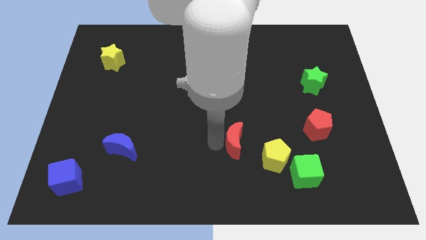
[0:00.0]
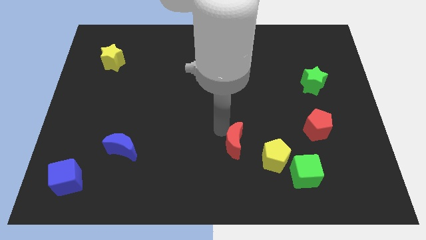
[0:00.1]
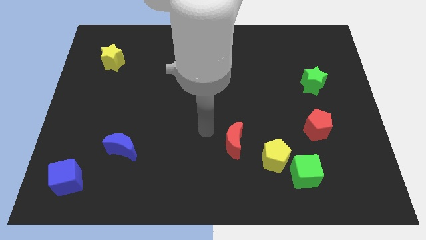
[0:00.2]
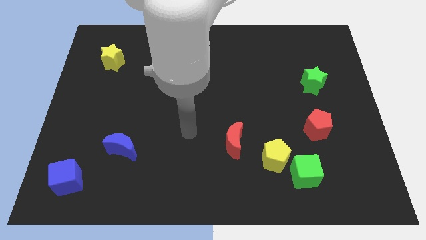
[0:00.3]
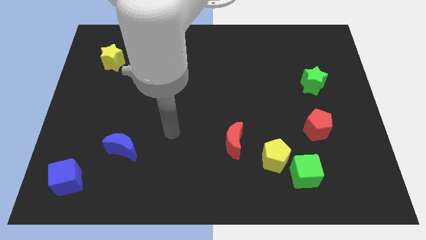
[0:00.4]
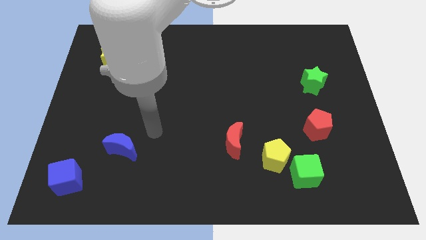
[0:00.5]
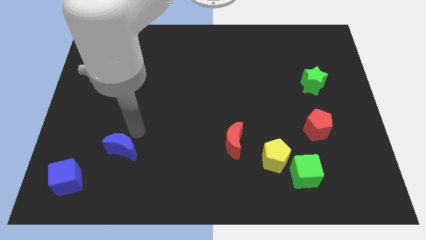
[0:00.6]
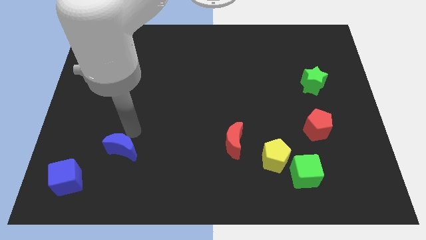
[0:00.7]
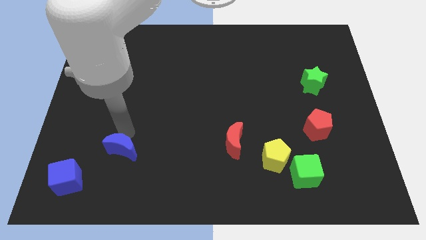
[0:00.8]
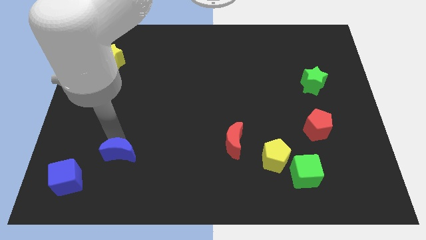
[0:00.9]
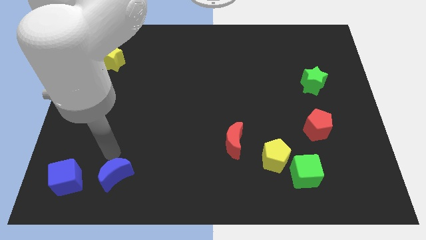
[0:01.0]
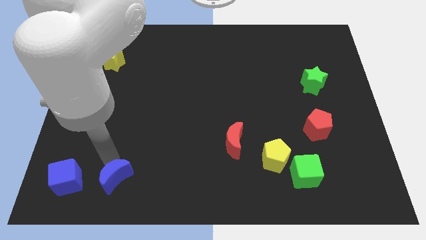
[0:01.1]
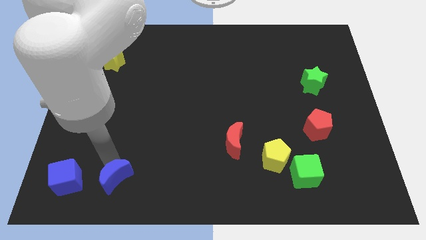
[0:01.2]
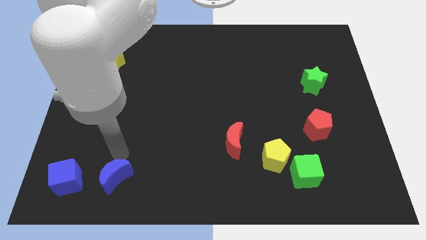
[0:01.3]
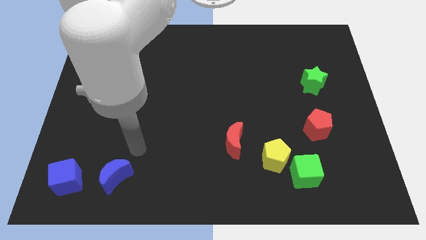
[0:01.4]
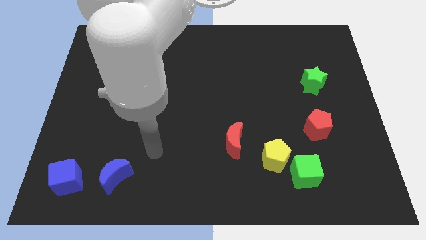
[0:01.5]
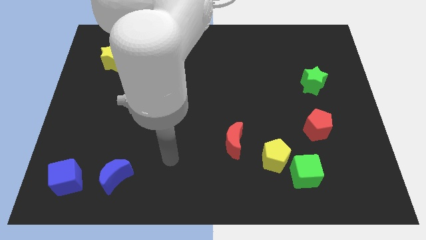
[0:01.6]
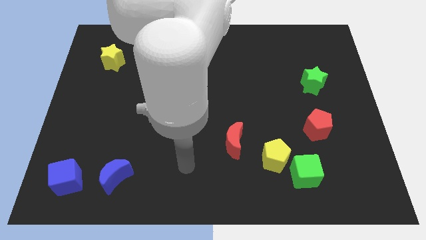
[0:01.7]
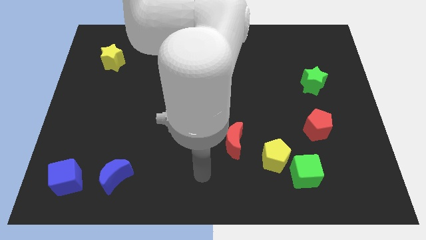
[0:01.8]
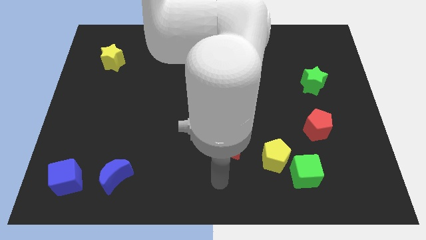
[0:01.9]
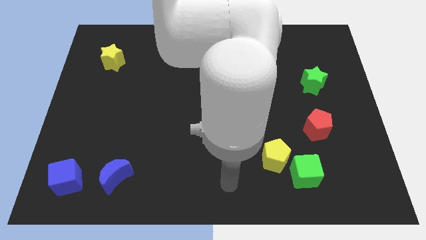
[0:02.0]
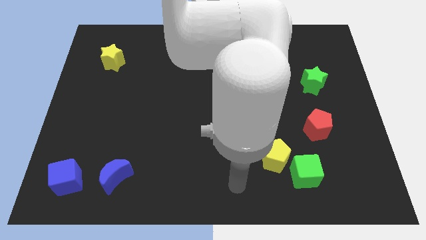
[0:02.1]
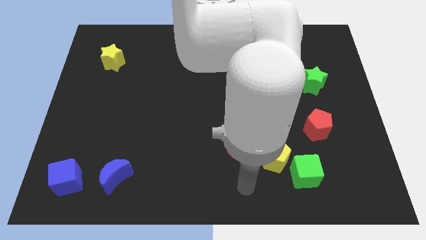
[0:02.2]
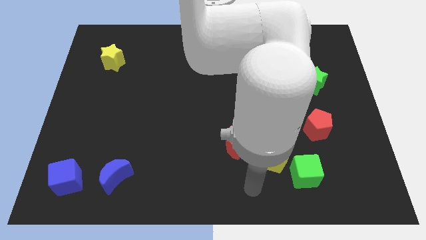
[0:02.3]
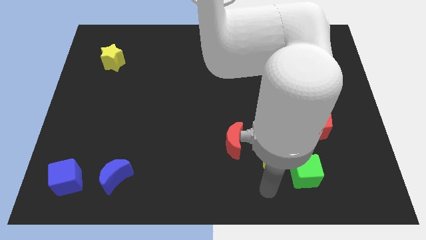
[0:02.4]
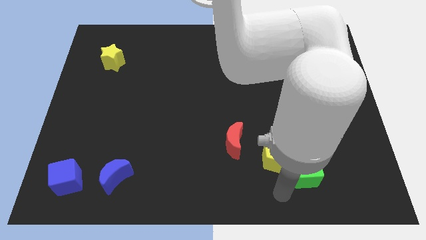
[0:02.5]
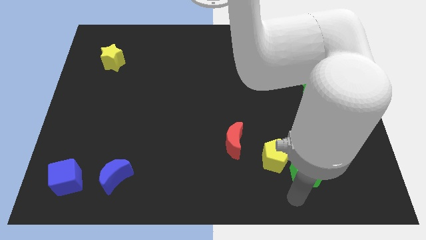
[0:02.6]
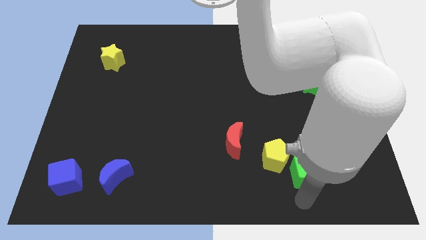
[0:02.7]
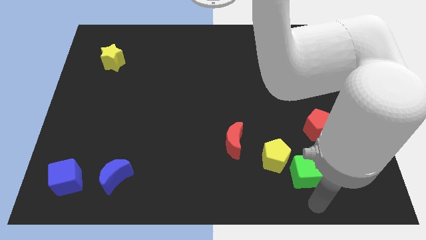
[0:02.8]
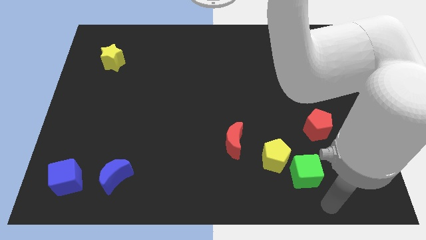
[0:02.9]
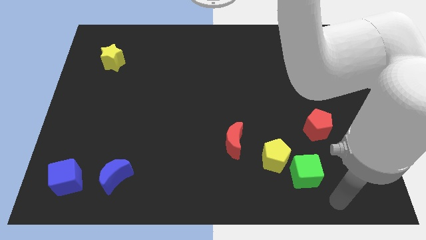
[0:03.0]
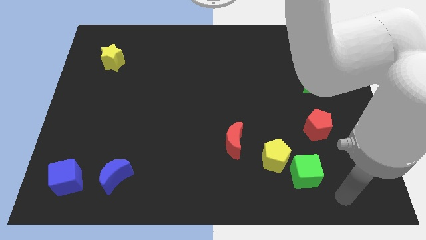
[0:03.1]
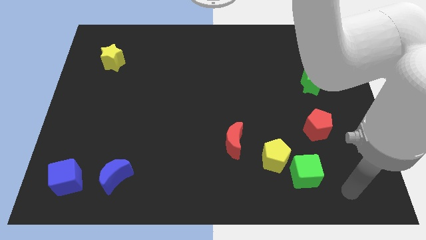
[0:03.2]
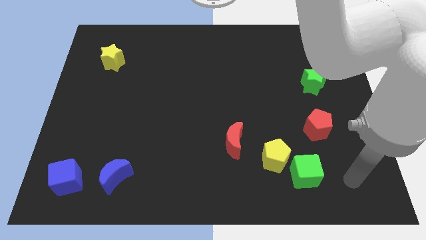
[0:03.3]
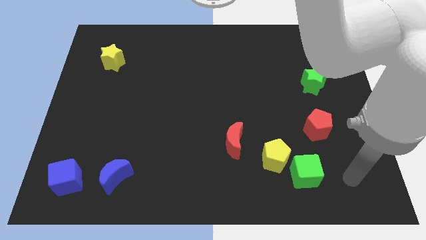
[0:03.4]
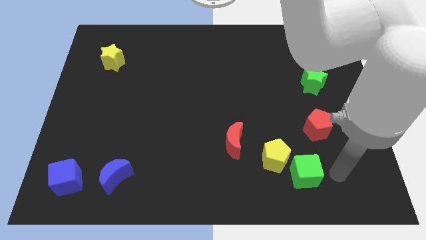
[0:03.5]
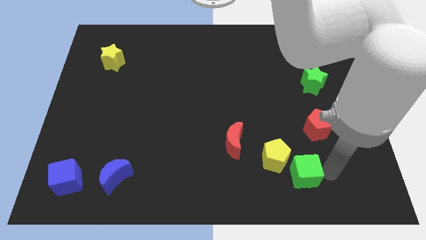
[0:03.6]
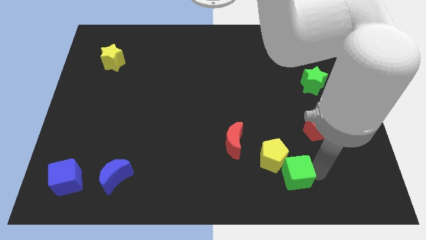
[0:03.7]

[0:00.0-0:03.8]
put the blue moon on the right side of the blue cube

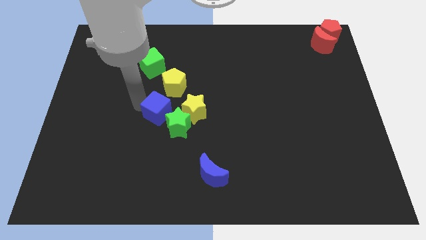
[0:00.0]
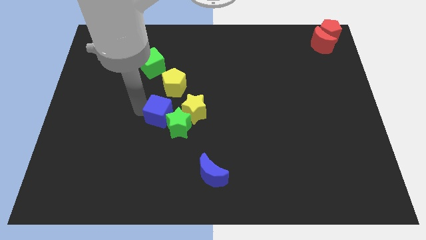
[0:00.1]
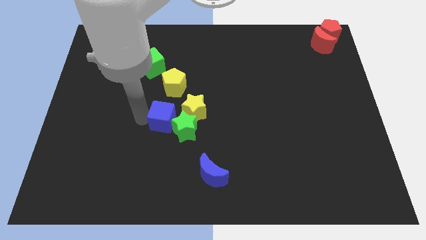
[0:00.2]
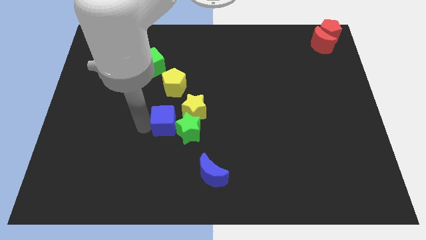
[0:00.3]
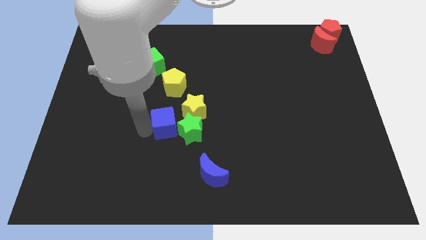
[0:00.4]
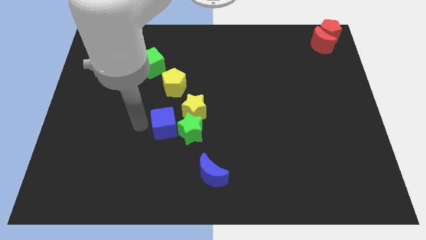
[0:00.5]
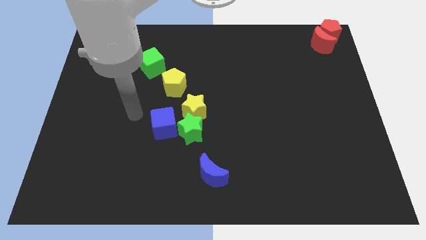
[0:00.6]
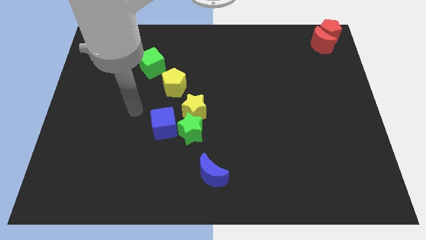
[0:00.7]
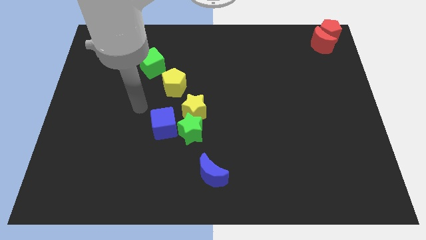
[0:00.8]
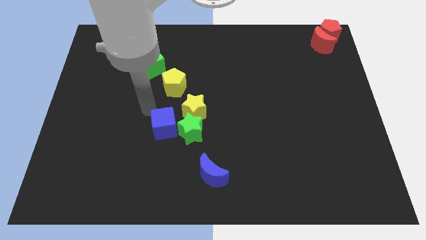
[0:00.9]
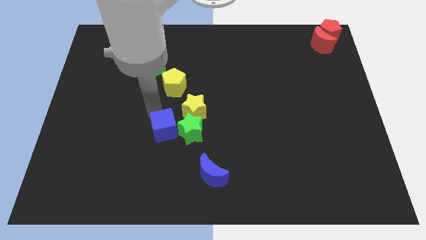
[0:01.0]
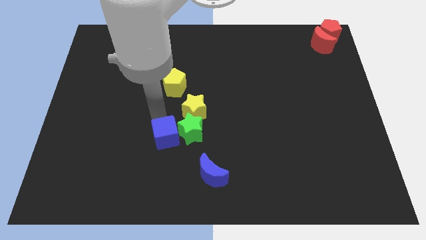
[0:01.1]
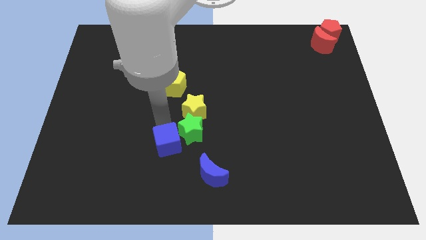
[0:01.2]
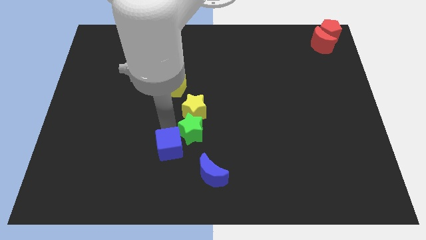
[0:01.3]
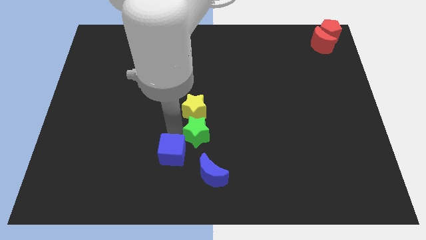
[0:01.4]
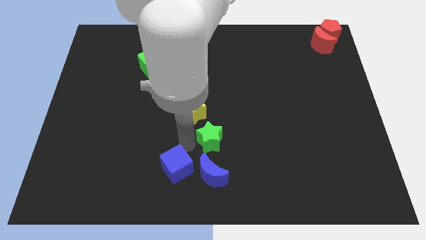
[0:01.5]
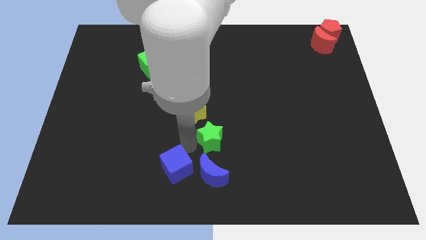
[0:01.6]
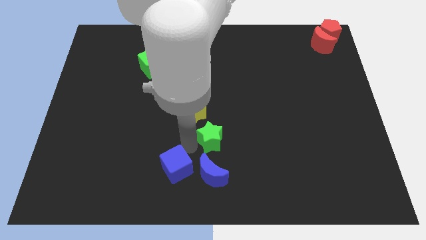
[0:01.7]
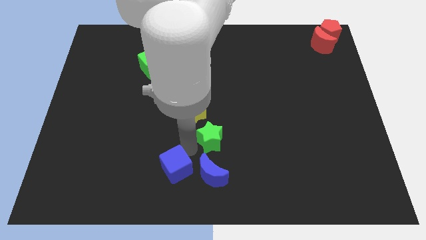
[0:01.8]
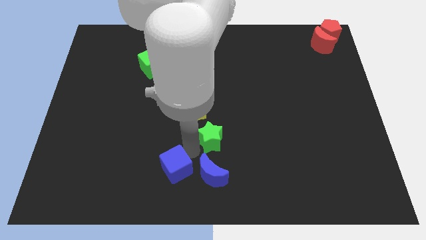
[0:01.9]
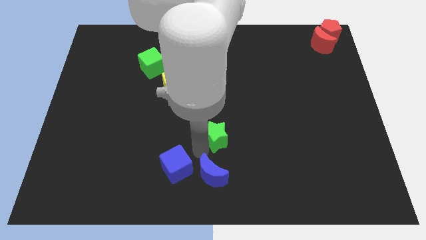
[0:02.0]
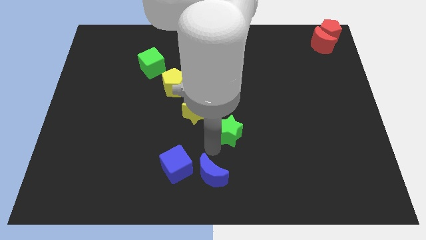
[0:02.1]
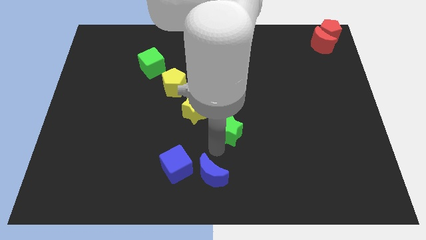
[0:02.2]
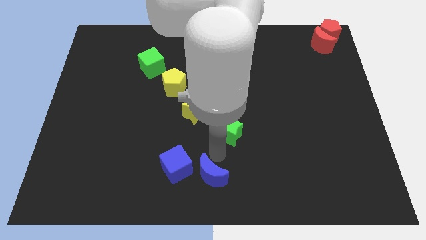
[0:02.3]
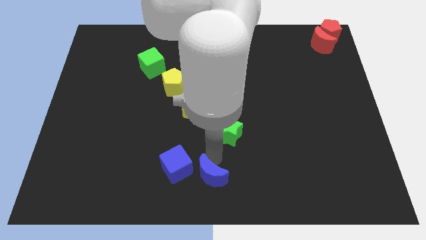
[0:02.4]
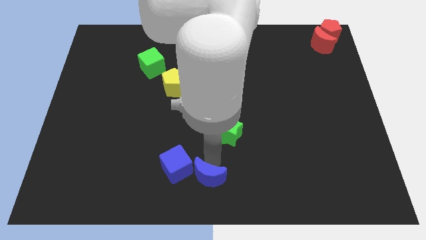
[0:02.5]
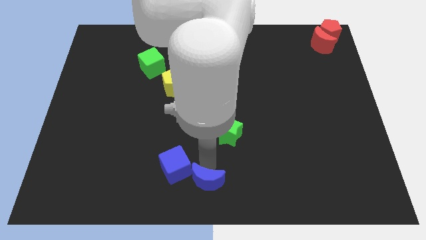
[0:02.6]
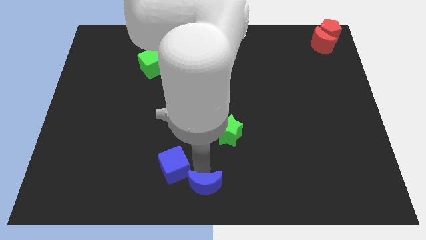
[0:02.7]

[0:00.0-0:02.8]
separate the blue cube from the group of blocks

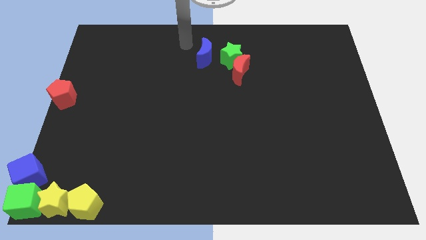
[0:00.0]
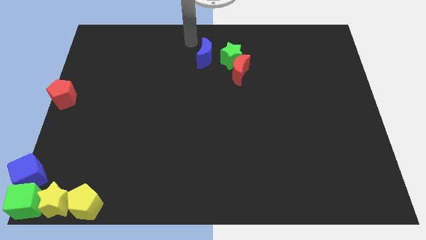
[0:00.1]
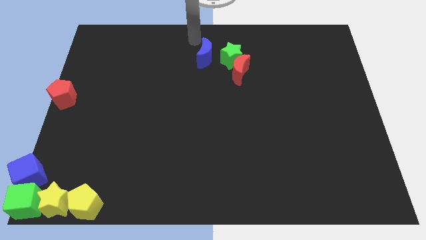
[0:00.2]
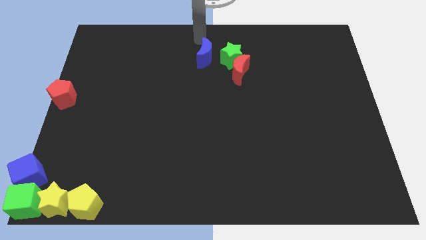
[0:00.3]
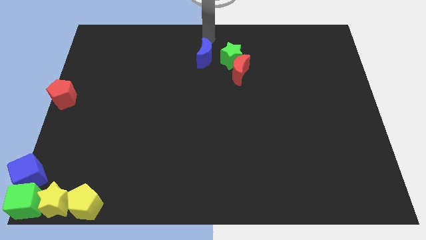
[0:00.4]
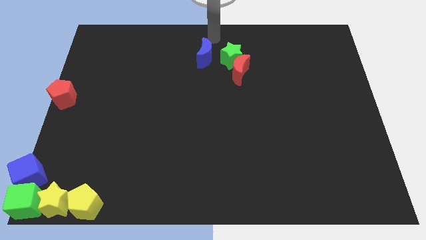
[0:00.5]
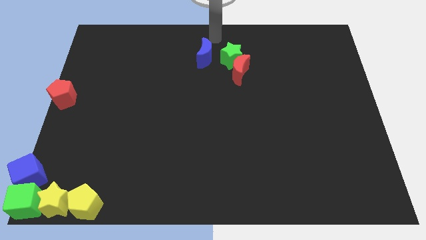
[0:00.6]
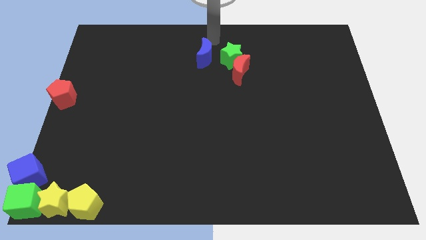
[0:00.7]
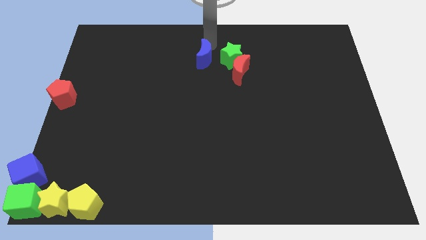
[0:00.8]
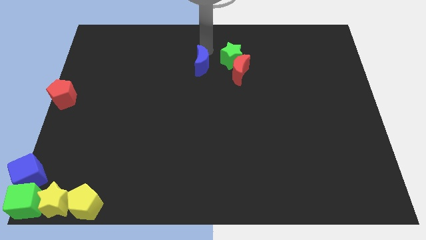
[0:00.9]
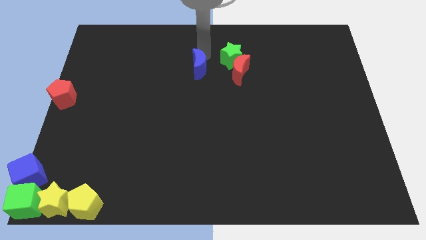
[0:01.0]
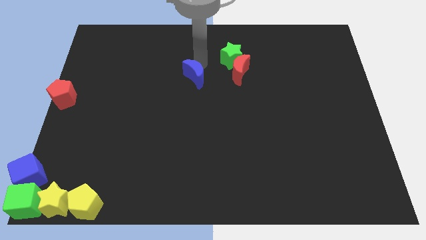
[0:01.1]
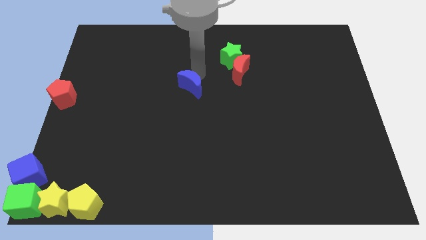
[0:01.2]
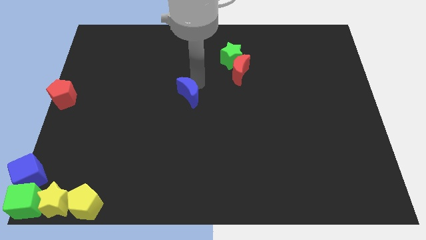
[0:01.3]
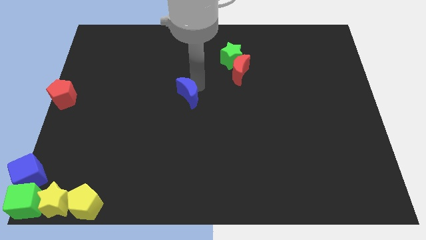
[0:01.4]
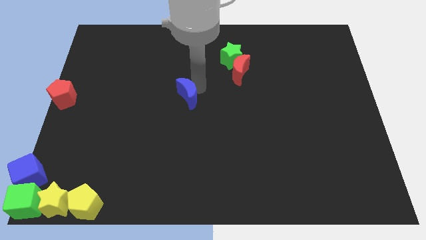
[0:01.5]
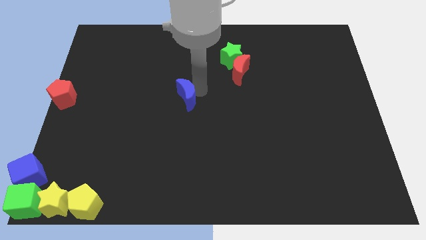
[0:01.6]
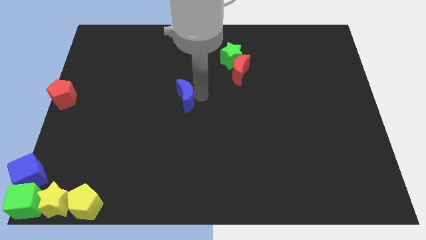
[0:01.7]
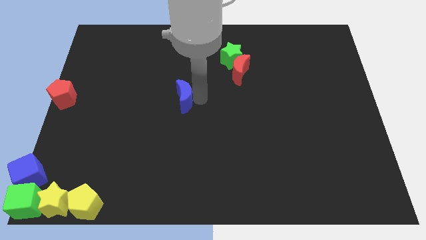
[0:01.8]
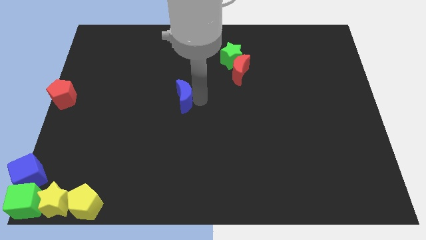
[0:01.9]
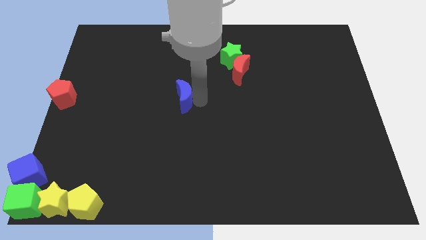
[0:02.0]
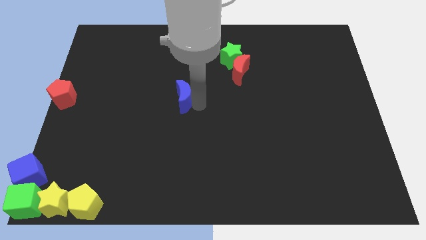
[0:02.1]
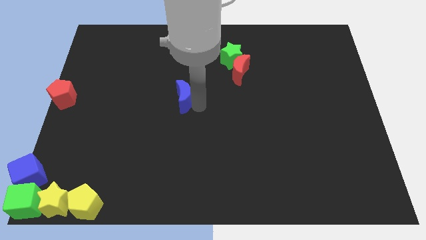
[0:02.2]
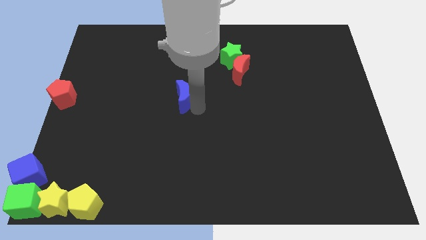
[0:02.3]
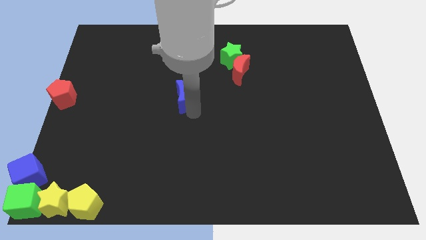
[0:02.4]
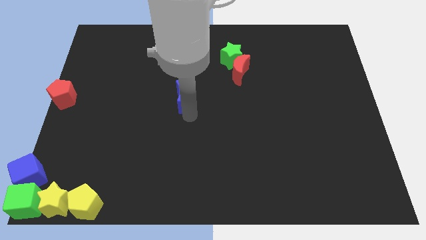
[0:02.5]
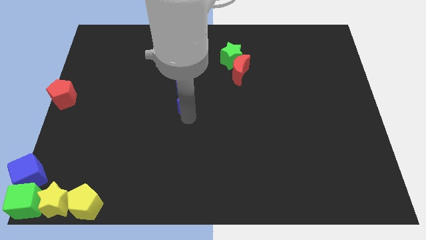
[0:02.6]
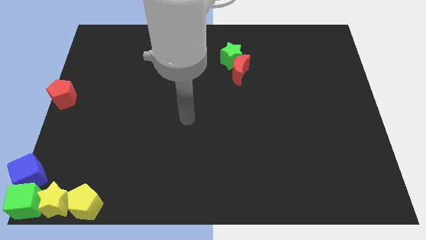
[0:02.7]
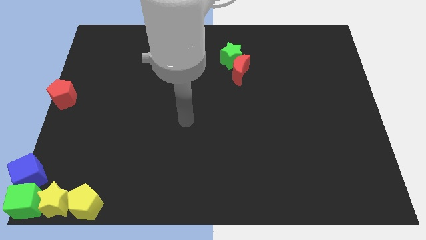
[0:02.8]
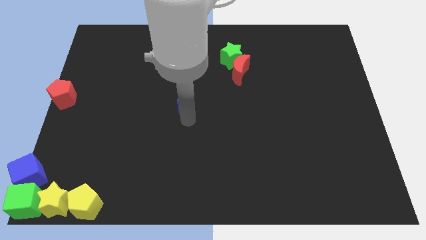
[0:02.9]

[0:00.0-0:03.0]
put the blue moon parallel to red pentagon
